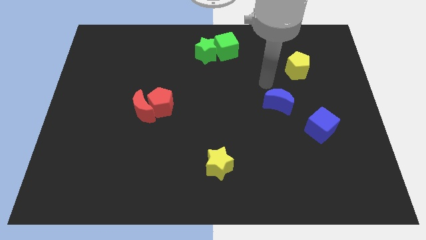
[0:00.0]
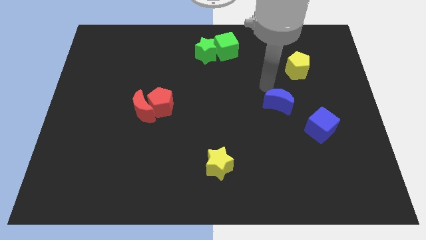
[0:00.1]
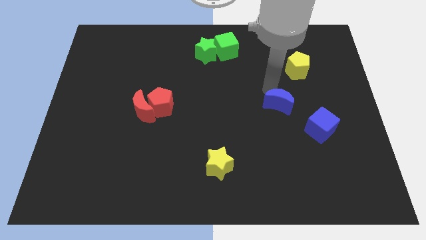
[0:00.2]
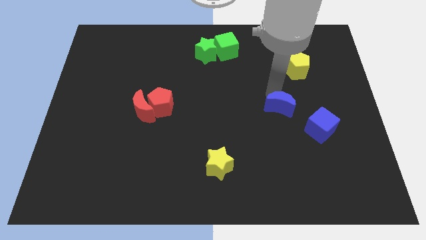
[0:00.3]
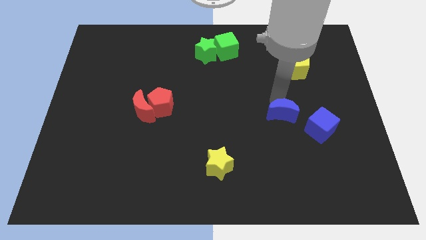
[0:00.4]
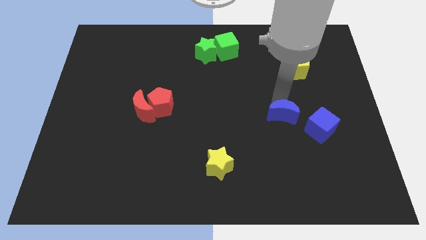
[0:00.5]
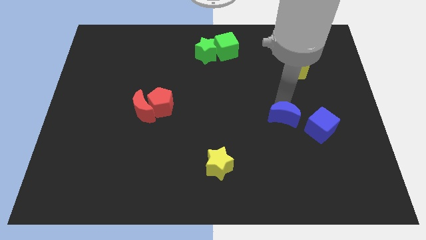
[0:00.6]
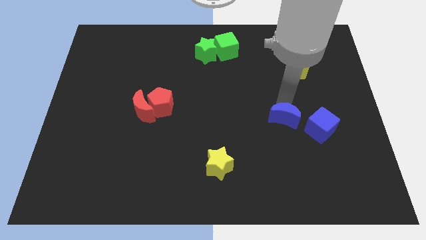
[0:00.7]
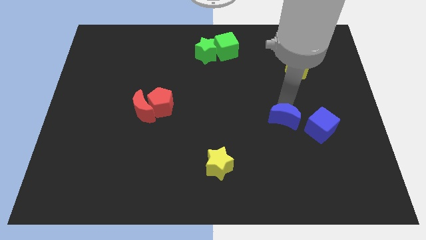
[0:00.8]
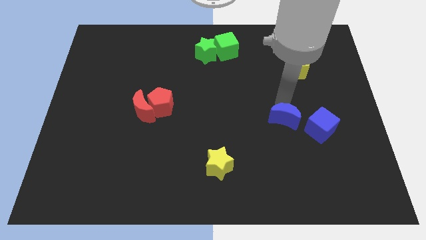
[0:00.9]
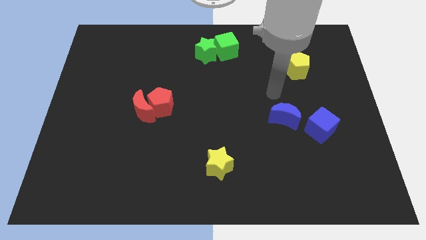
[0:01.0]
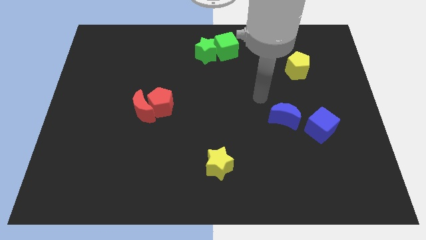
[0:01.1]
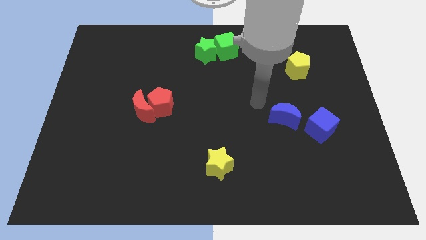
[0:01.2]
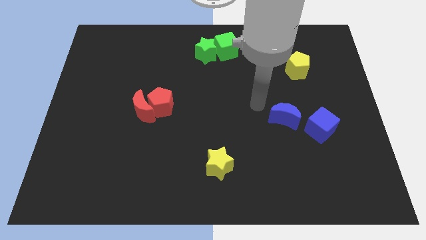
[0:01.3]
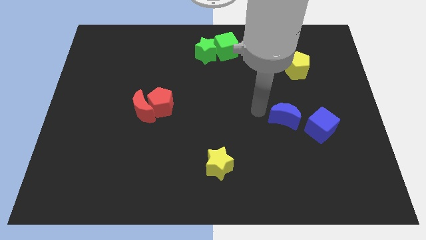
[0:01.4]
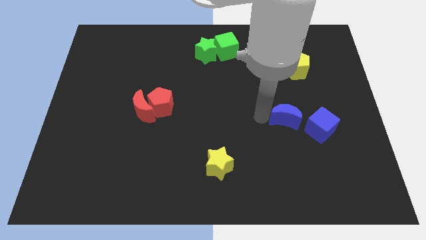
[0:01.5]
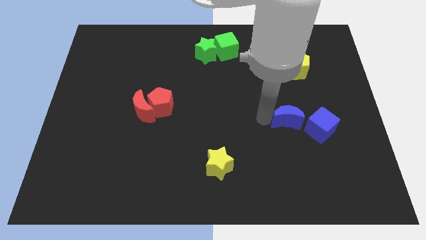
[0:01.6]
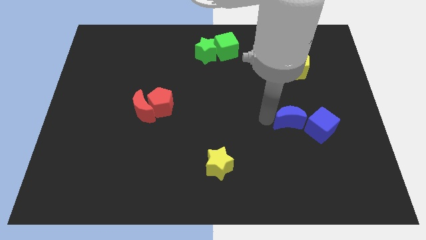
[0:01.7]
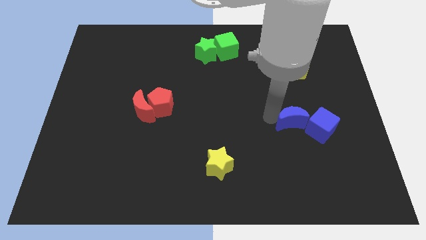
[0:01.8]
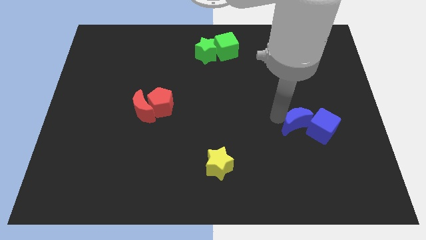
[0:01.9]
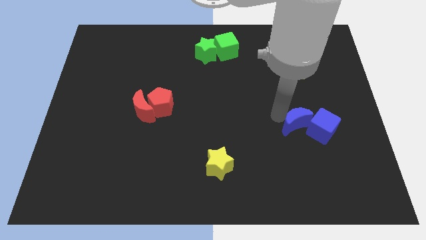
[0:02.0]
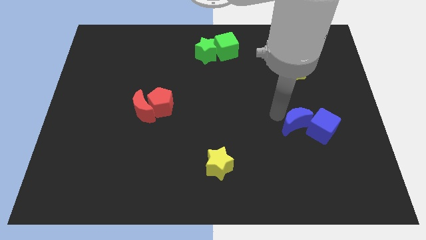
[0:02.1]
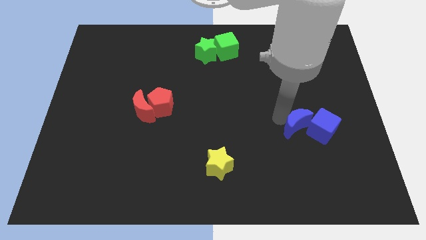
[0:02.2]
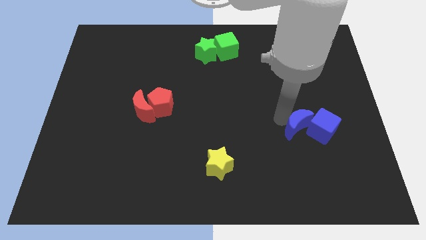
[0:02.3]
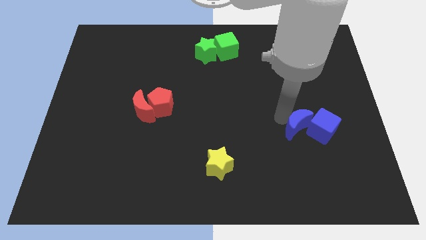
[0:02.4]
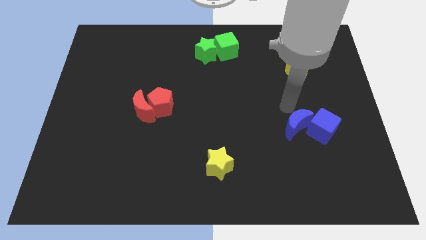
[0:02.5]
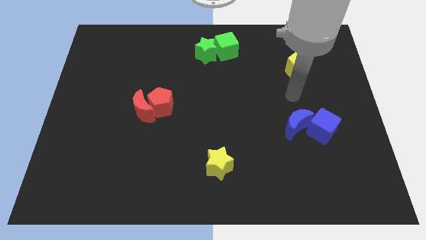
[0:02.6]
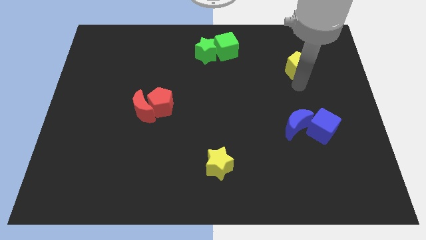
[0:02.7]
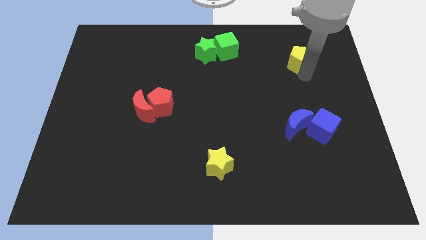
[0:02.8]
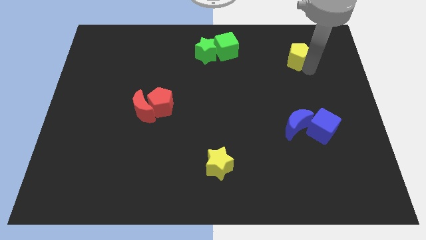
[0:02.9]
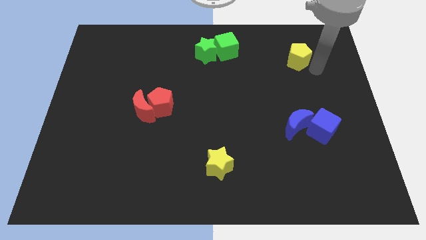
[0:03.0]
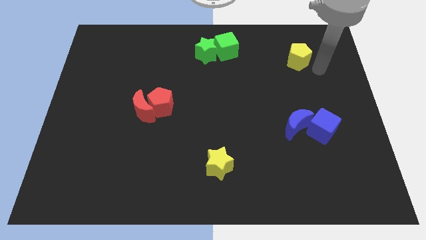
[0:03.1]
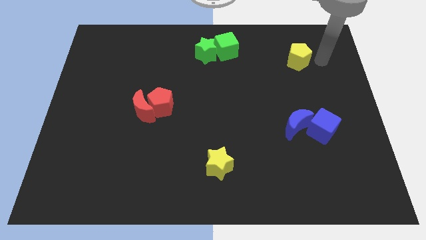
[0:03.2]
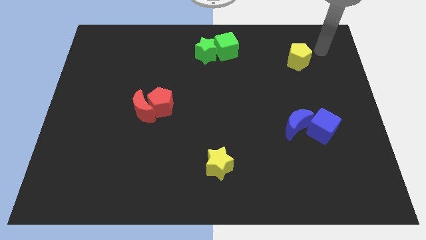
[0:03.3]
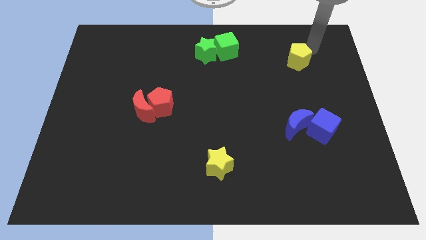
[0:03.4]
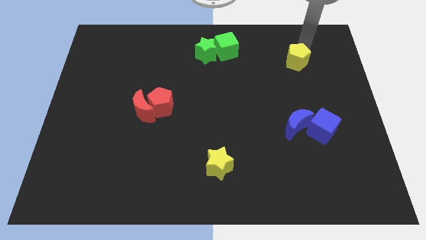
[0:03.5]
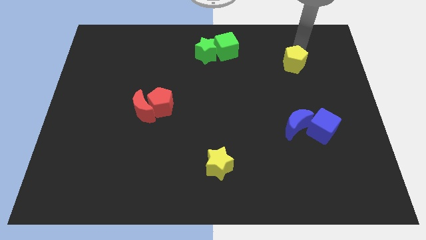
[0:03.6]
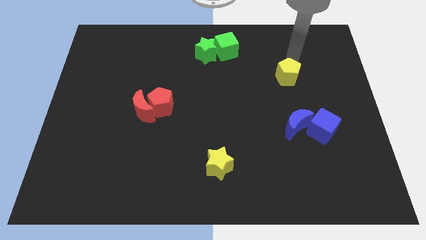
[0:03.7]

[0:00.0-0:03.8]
push the blue moon into the blue cube

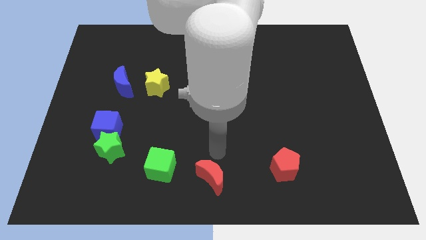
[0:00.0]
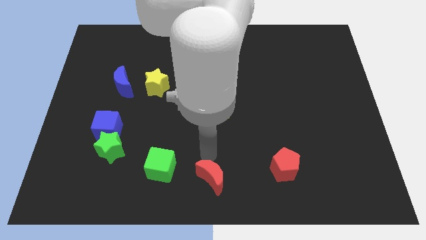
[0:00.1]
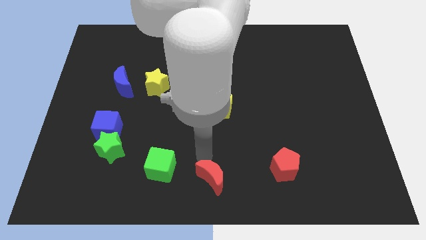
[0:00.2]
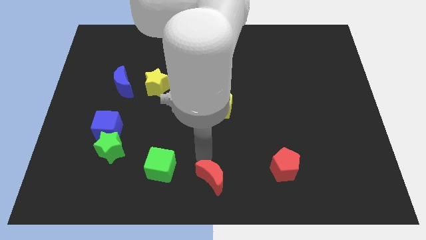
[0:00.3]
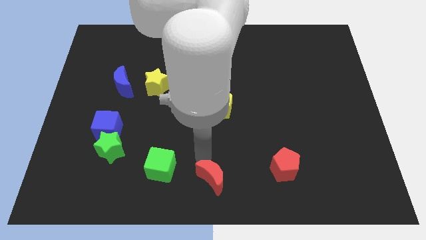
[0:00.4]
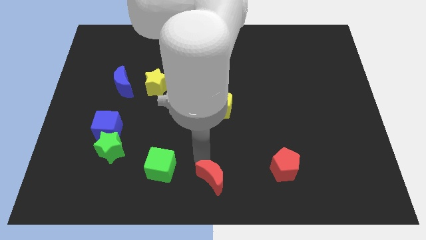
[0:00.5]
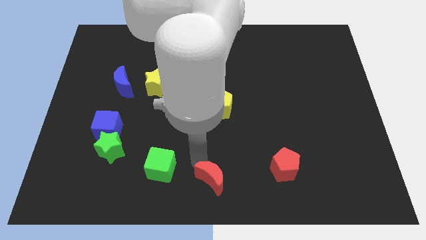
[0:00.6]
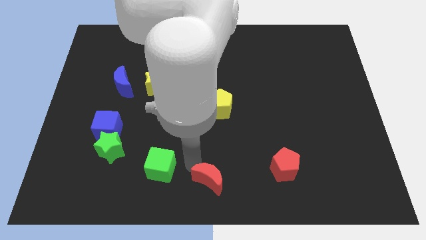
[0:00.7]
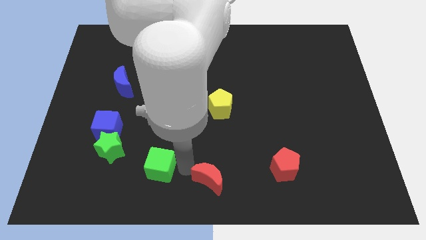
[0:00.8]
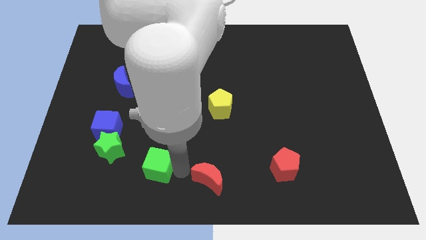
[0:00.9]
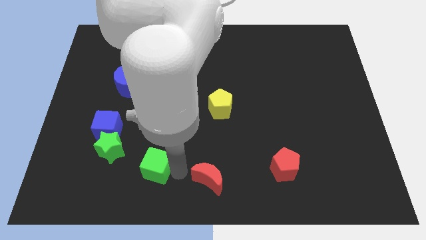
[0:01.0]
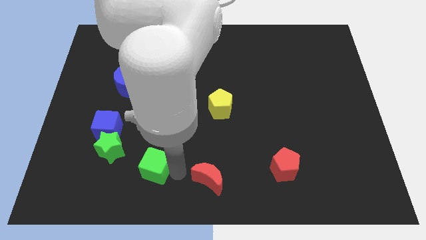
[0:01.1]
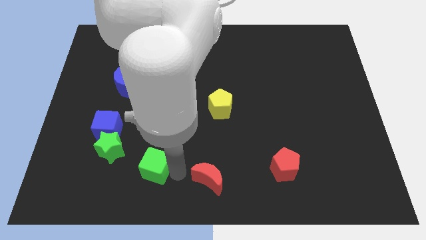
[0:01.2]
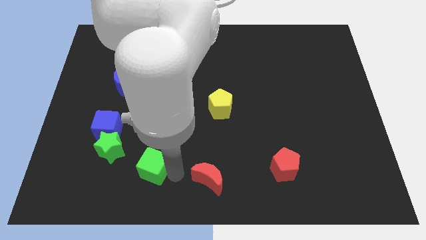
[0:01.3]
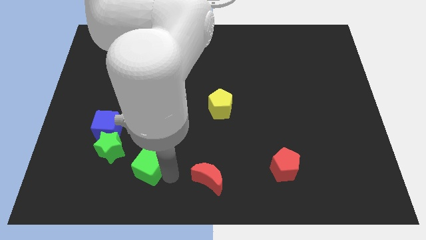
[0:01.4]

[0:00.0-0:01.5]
place your arm in between the green cube and red moon

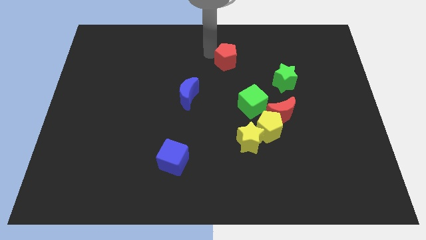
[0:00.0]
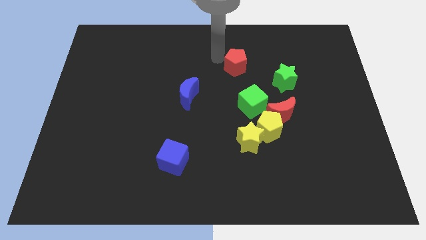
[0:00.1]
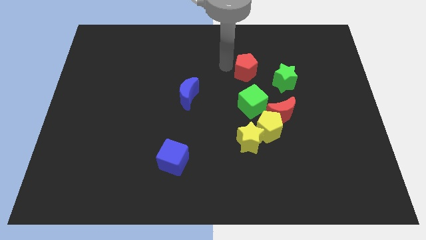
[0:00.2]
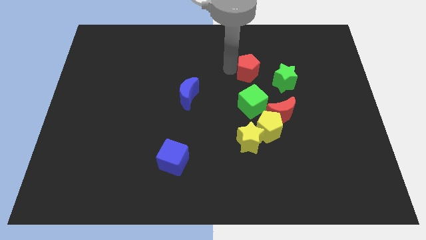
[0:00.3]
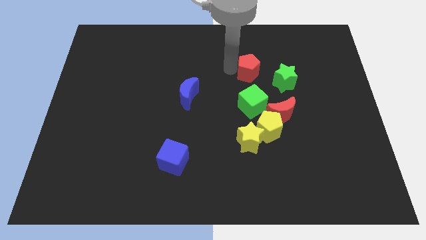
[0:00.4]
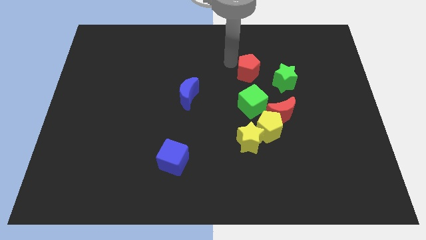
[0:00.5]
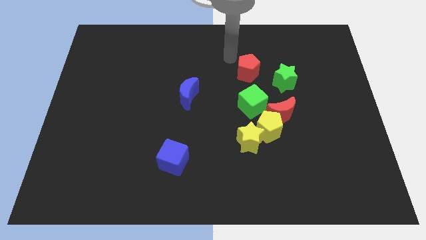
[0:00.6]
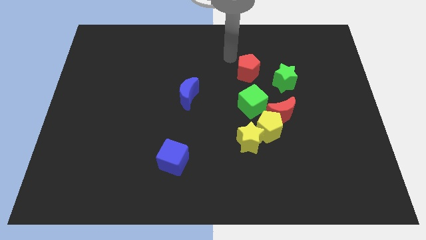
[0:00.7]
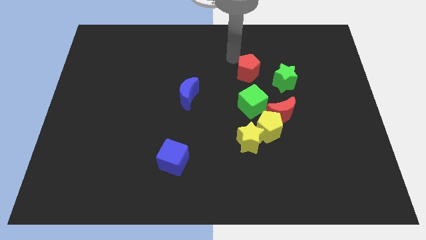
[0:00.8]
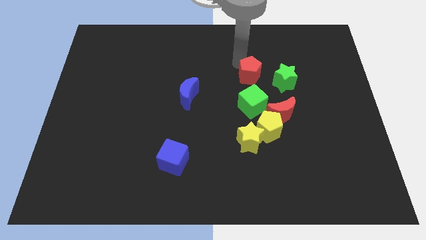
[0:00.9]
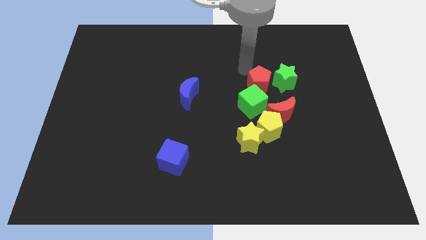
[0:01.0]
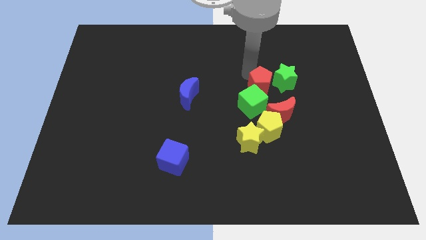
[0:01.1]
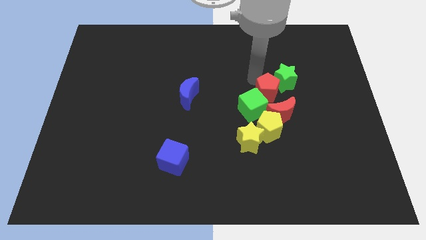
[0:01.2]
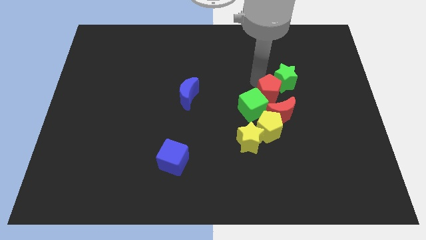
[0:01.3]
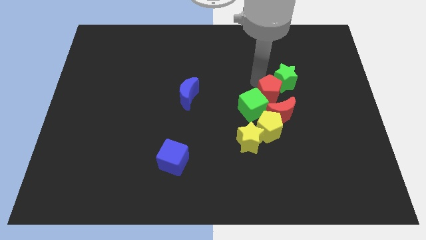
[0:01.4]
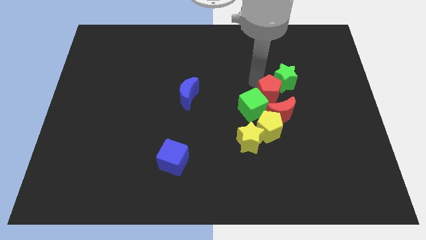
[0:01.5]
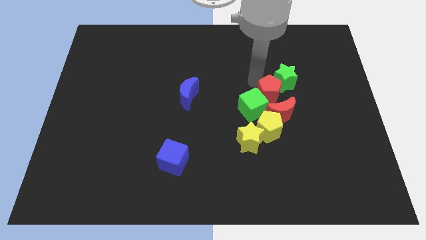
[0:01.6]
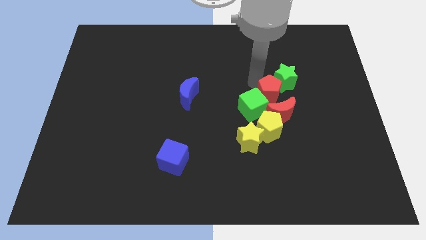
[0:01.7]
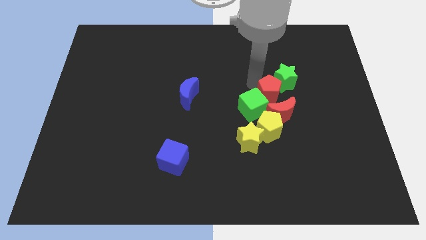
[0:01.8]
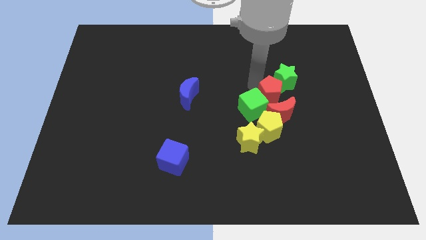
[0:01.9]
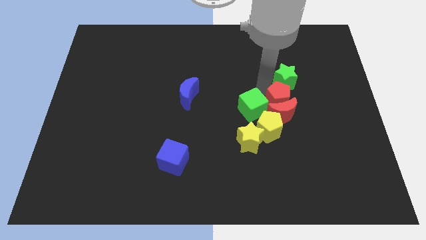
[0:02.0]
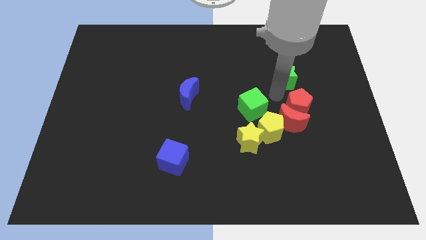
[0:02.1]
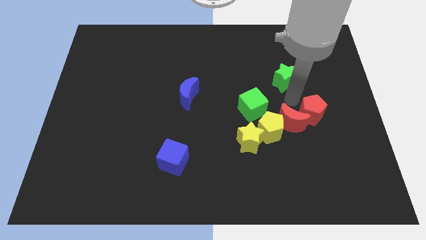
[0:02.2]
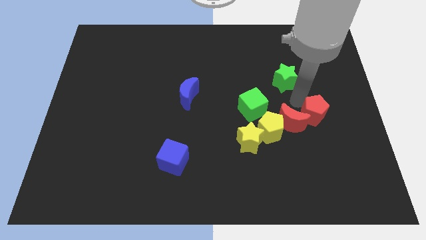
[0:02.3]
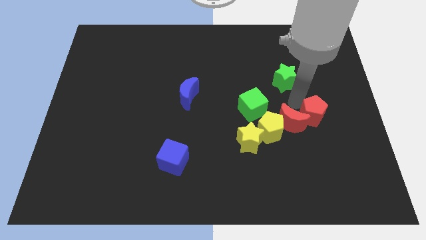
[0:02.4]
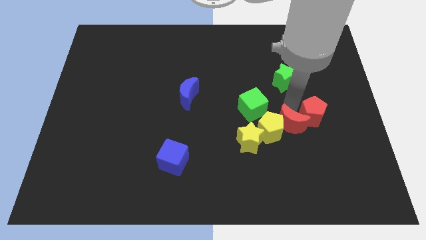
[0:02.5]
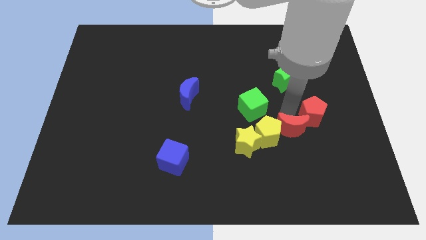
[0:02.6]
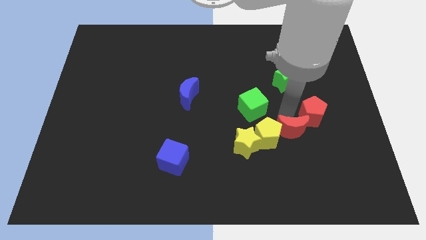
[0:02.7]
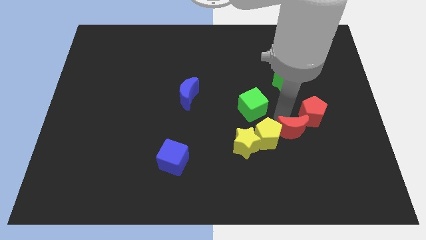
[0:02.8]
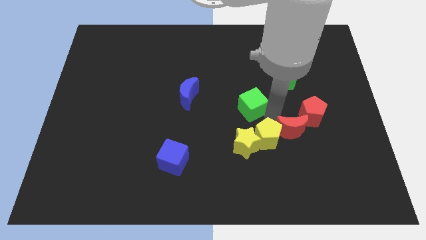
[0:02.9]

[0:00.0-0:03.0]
put red pentagon on top right of red moon

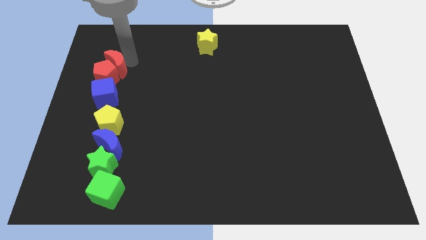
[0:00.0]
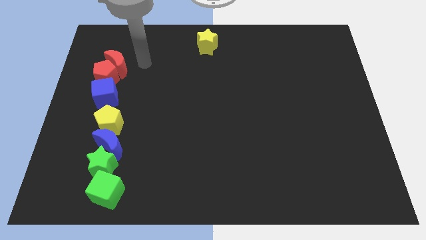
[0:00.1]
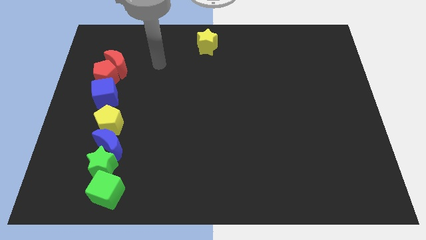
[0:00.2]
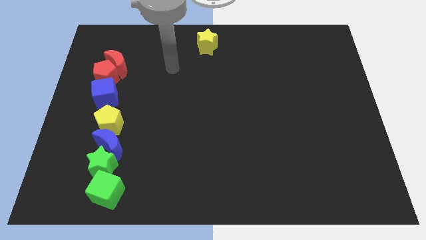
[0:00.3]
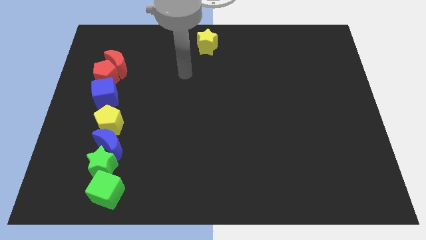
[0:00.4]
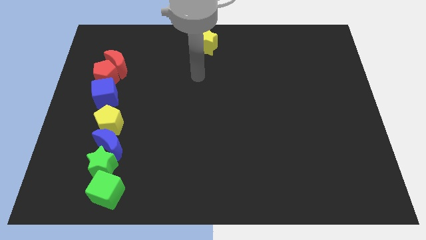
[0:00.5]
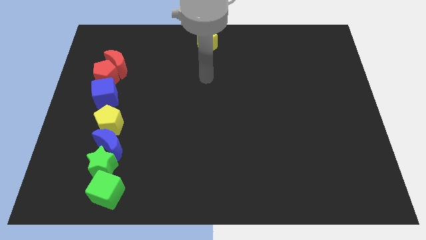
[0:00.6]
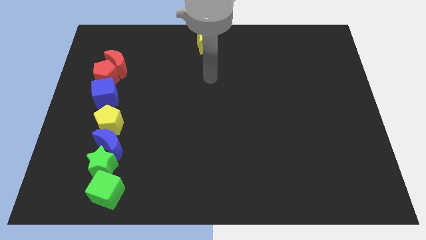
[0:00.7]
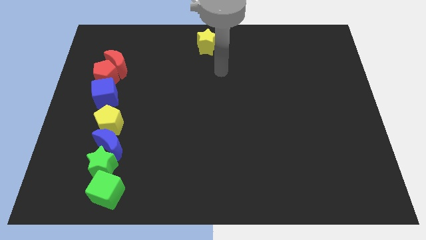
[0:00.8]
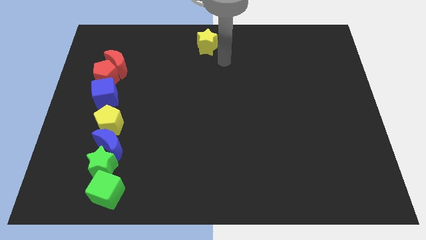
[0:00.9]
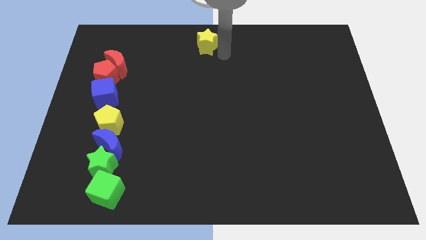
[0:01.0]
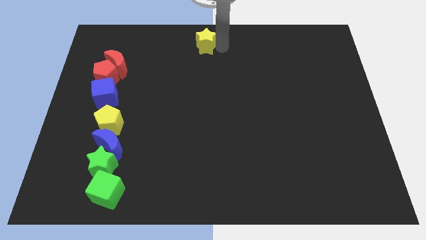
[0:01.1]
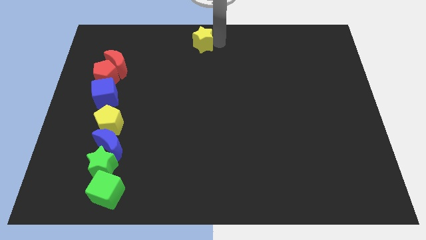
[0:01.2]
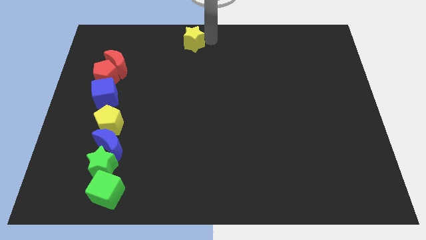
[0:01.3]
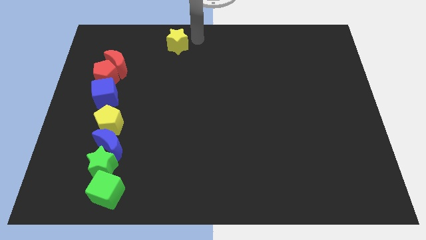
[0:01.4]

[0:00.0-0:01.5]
place the yellow star diagonally to red moon
